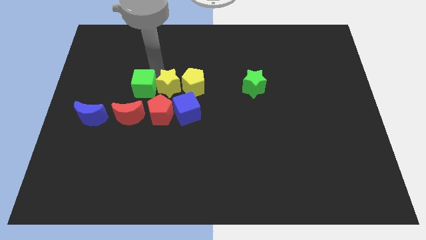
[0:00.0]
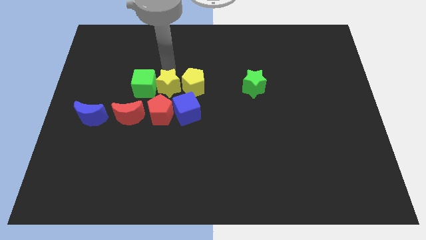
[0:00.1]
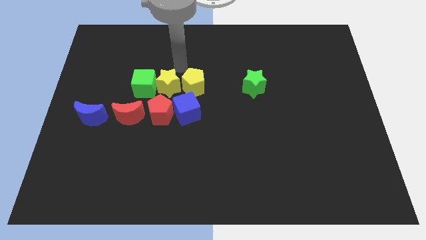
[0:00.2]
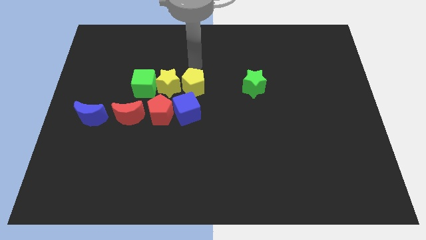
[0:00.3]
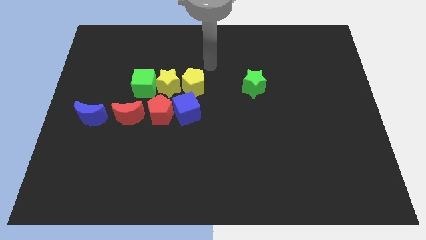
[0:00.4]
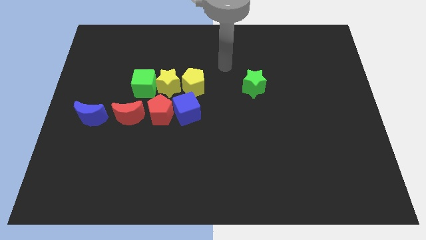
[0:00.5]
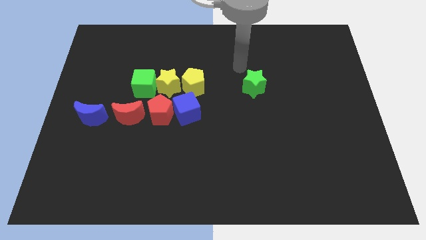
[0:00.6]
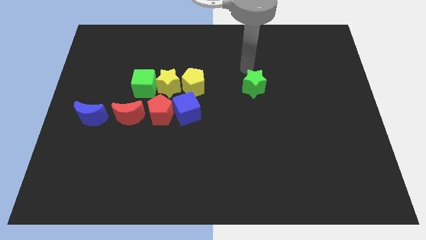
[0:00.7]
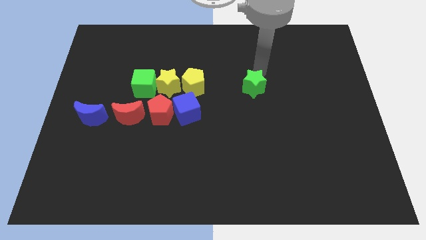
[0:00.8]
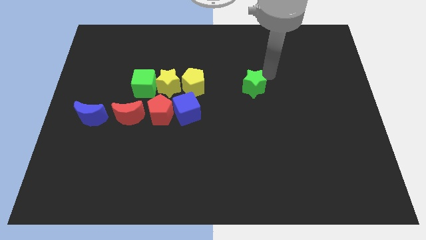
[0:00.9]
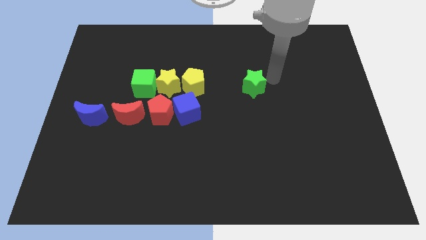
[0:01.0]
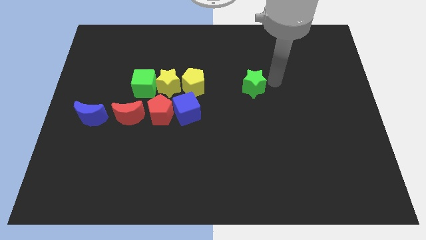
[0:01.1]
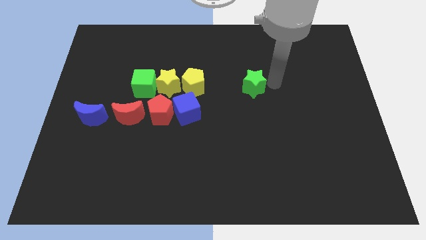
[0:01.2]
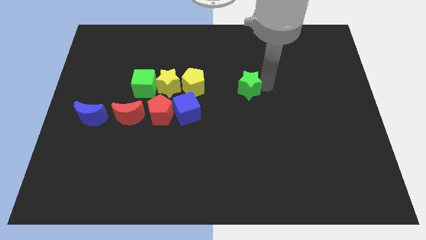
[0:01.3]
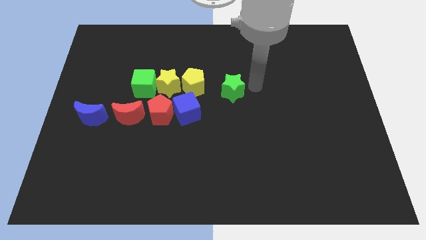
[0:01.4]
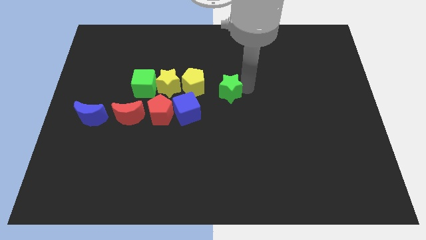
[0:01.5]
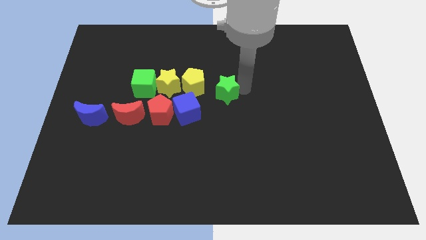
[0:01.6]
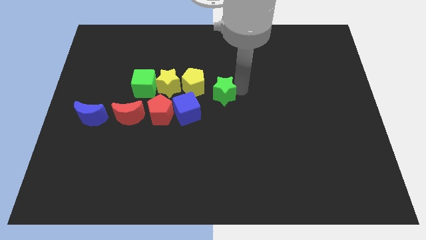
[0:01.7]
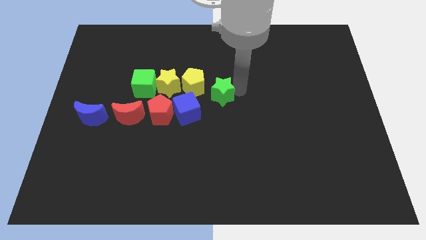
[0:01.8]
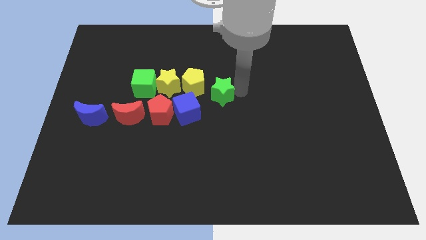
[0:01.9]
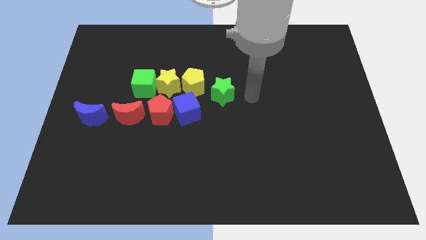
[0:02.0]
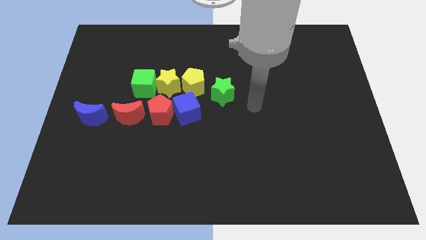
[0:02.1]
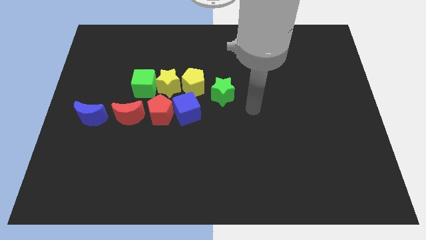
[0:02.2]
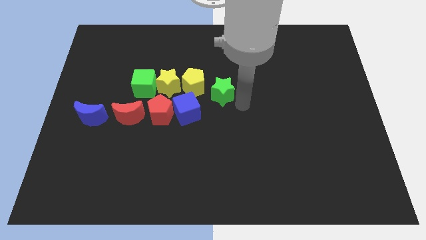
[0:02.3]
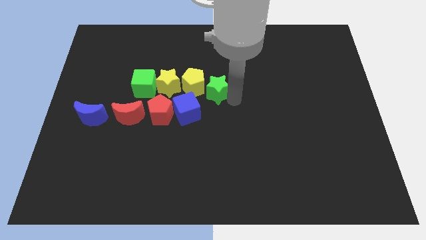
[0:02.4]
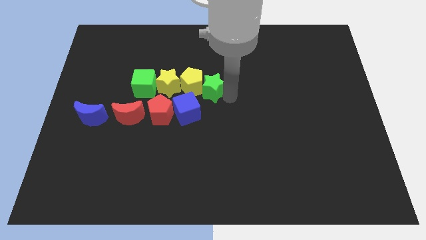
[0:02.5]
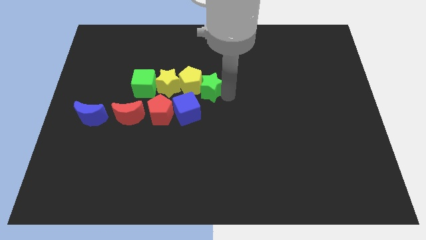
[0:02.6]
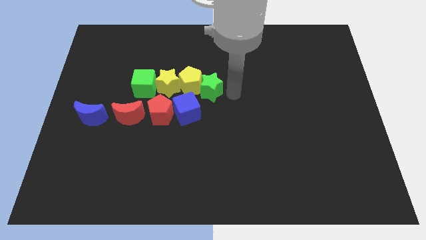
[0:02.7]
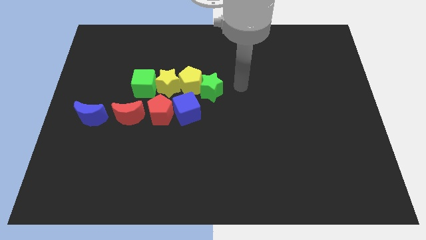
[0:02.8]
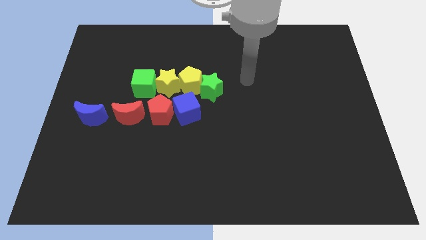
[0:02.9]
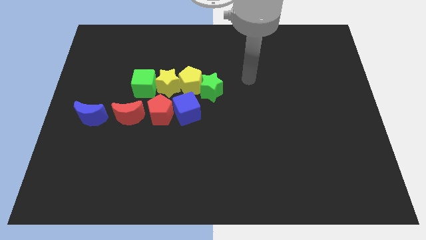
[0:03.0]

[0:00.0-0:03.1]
move the green star into the yellow pentagon

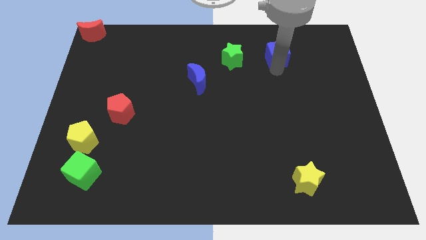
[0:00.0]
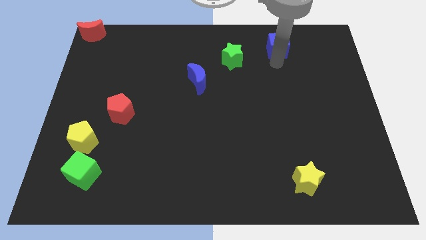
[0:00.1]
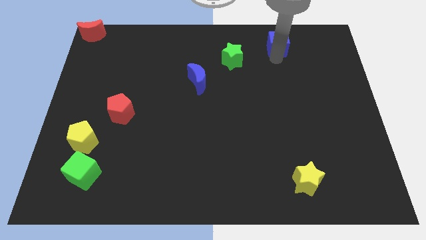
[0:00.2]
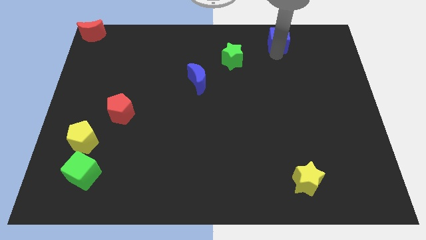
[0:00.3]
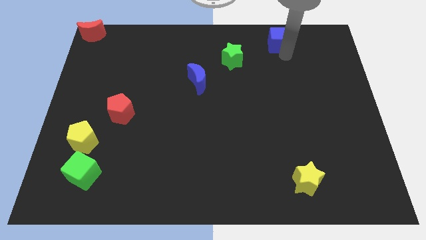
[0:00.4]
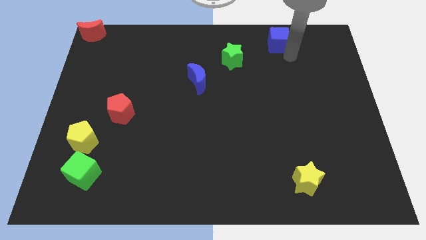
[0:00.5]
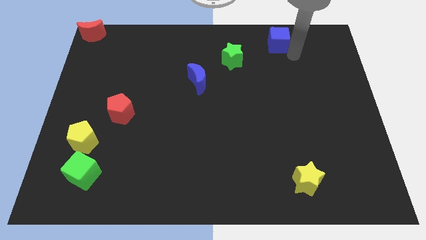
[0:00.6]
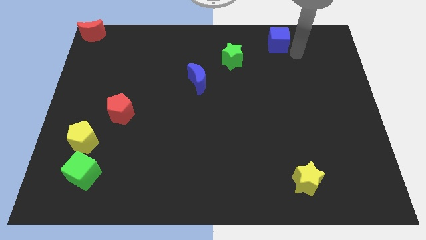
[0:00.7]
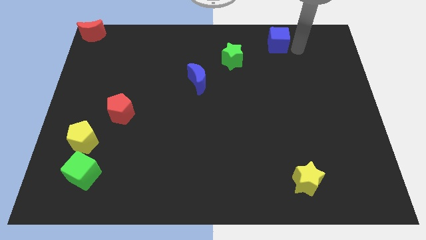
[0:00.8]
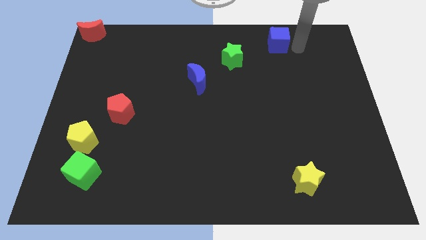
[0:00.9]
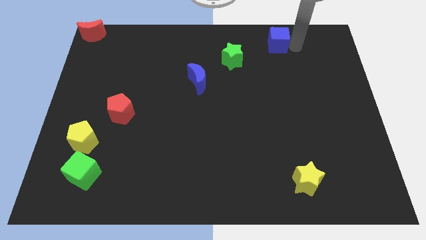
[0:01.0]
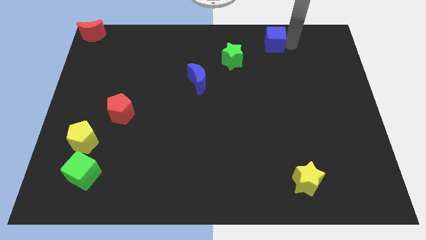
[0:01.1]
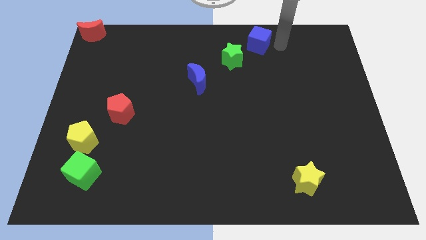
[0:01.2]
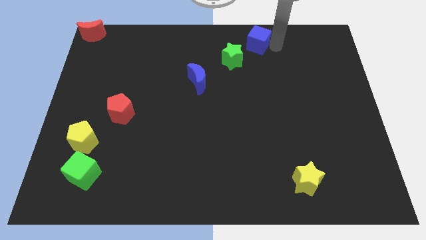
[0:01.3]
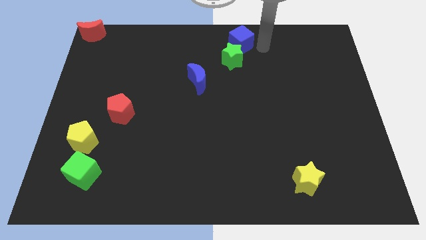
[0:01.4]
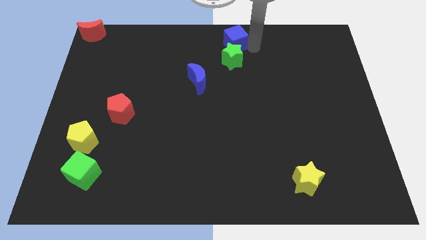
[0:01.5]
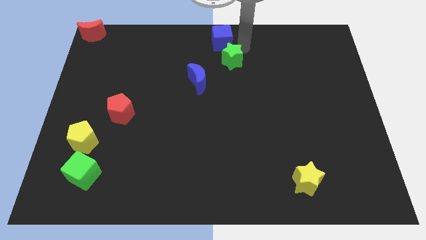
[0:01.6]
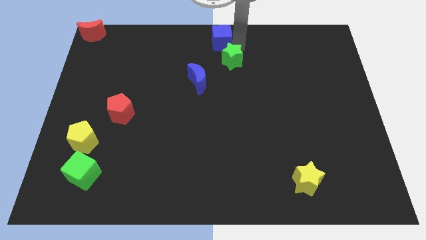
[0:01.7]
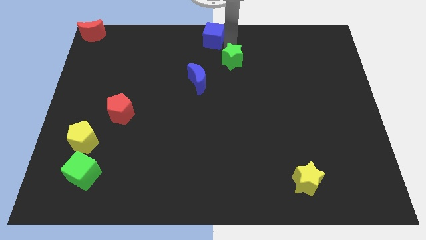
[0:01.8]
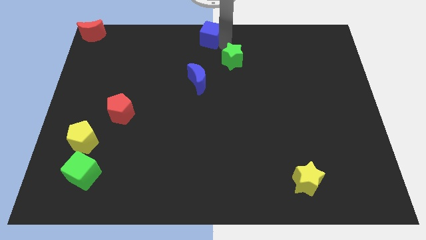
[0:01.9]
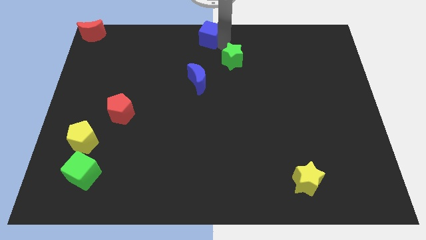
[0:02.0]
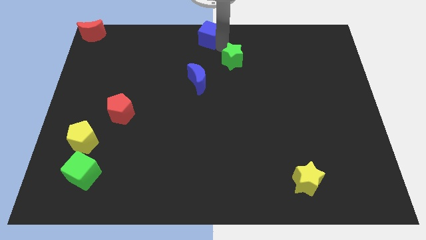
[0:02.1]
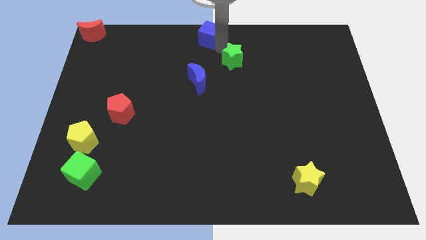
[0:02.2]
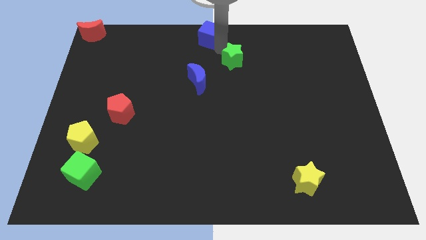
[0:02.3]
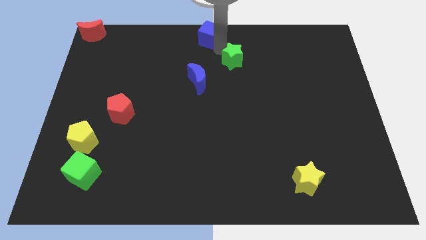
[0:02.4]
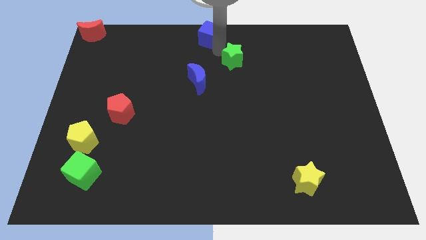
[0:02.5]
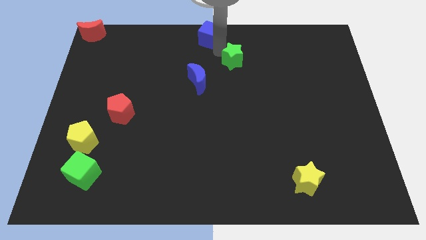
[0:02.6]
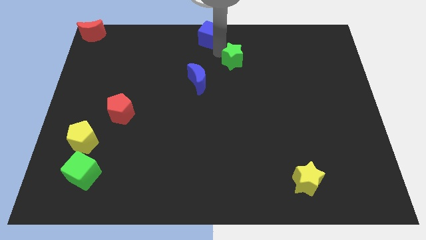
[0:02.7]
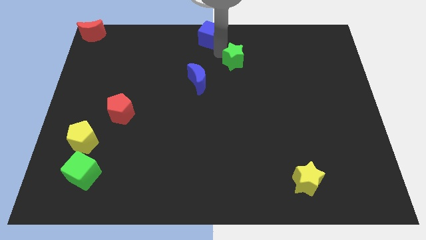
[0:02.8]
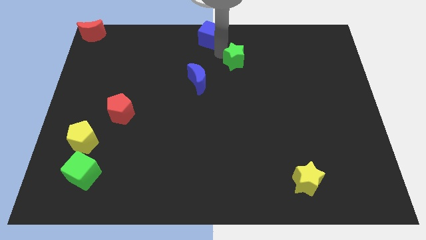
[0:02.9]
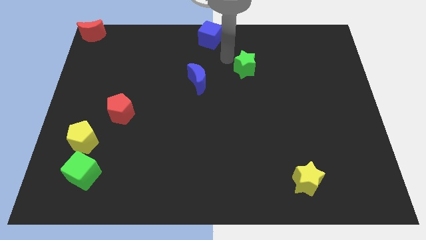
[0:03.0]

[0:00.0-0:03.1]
place blue cube at the top center of the board

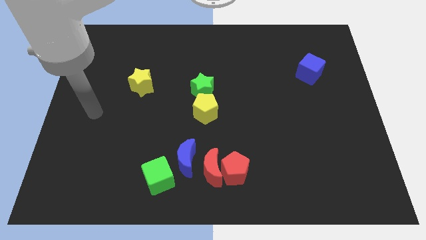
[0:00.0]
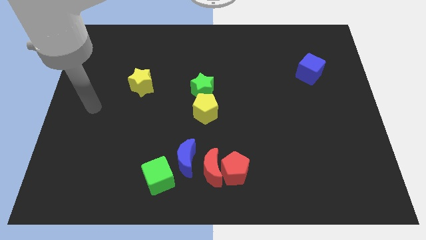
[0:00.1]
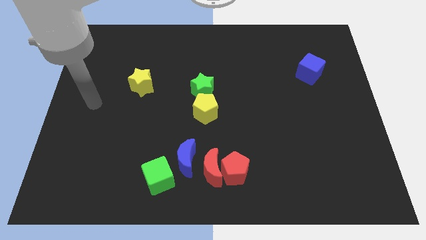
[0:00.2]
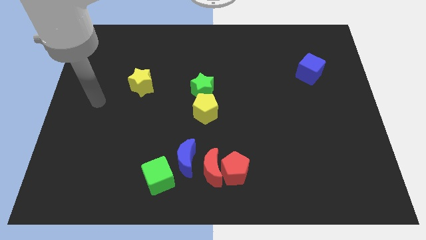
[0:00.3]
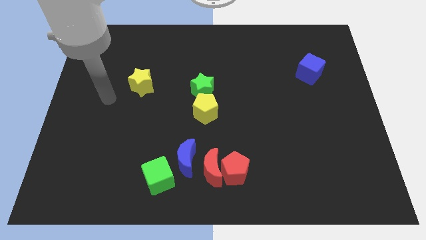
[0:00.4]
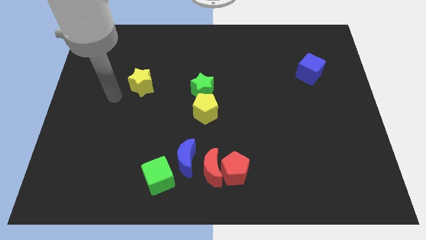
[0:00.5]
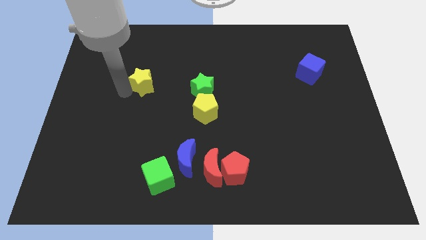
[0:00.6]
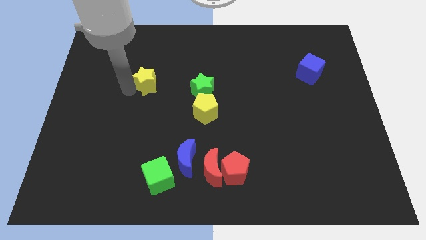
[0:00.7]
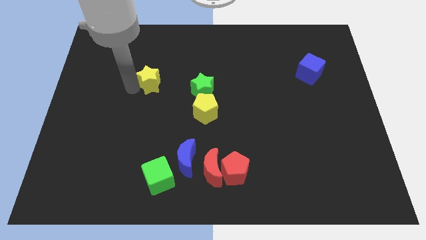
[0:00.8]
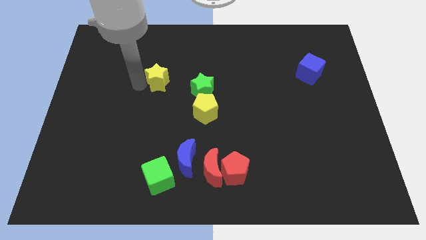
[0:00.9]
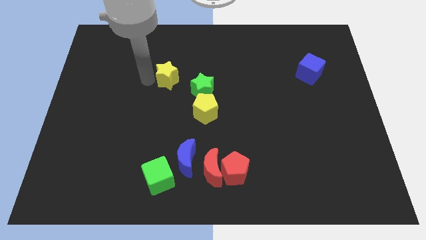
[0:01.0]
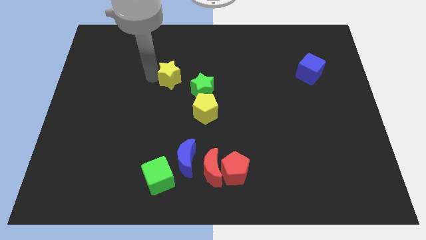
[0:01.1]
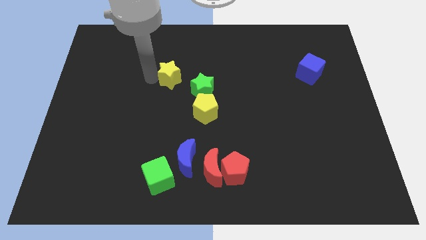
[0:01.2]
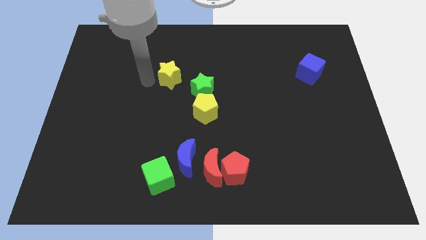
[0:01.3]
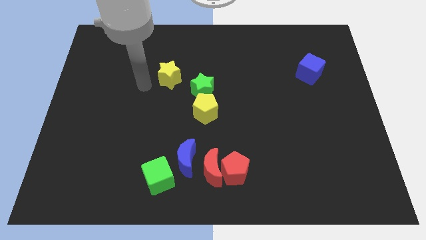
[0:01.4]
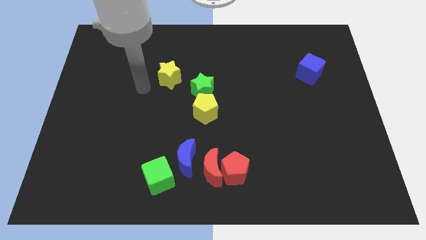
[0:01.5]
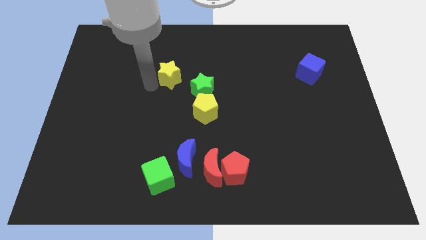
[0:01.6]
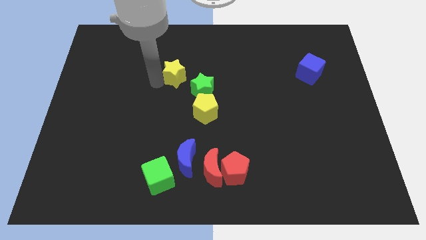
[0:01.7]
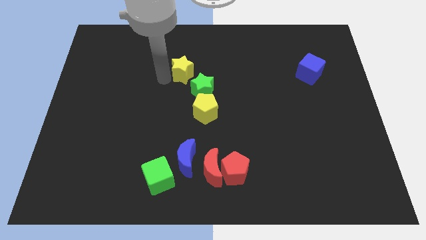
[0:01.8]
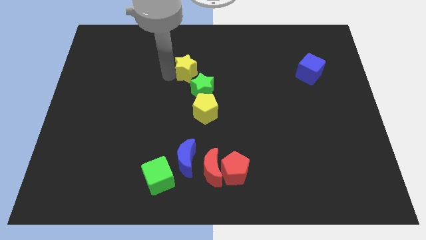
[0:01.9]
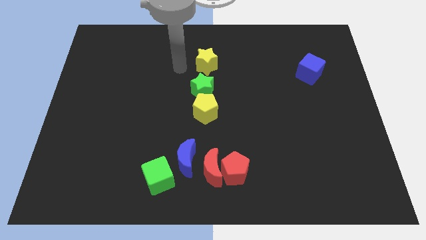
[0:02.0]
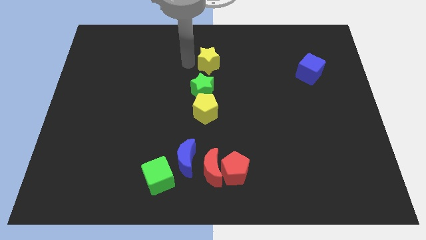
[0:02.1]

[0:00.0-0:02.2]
place the yellow star above the green star

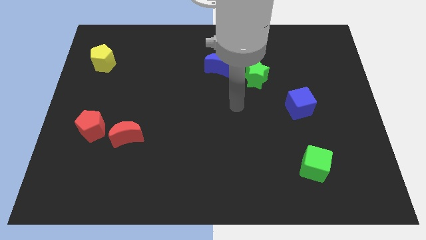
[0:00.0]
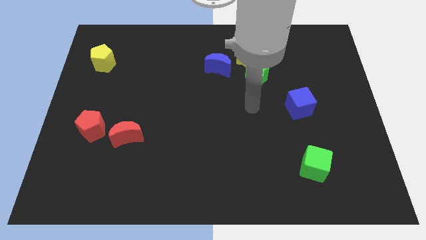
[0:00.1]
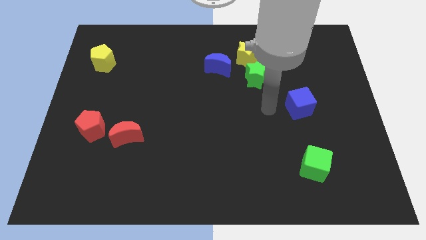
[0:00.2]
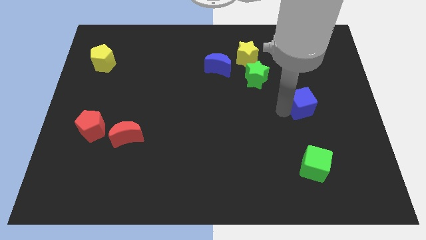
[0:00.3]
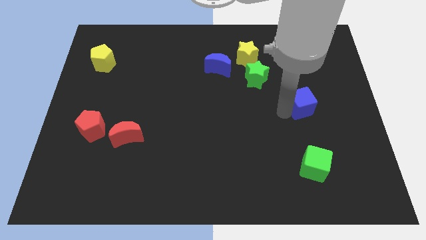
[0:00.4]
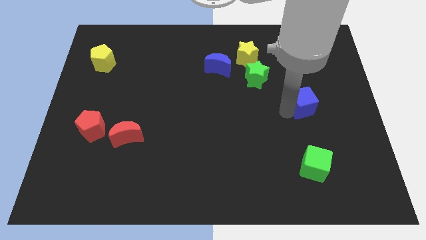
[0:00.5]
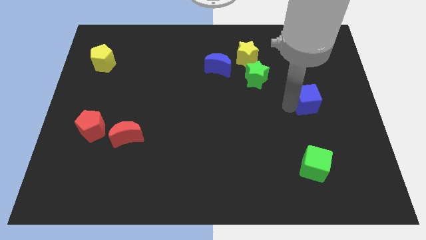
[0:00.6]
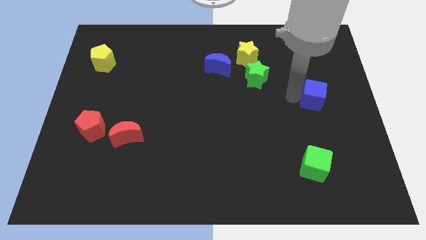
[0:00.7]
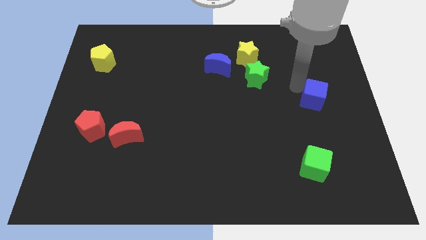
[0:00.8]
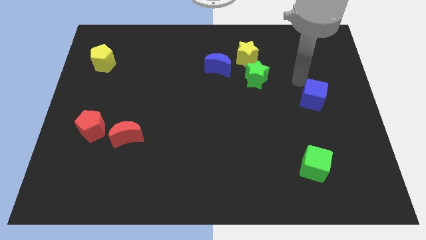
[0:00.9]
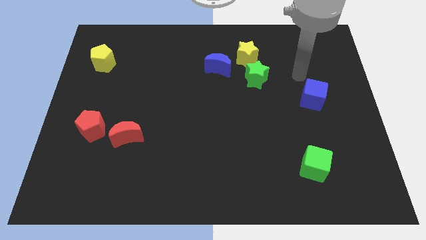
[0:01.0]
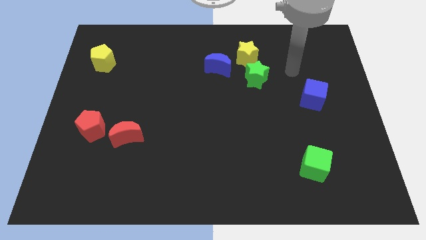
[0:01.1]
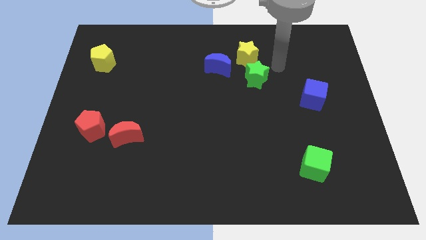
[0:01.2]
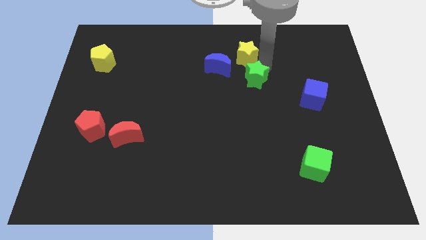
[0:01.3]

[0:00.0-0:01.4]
push the blue cube slightly to the right side of the board
